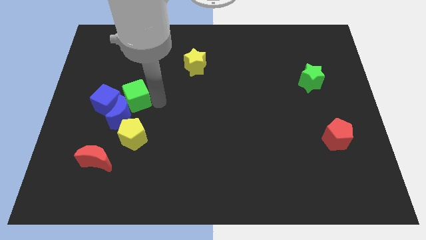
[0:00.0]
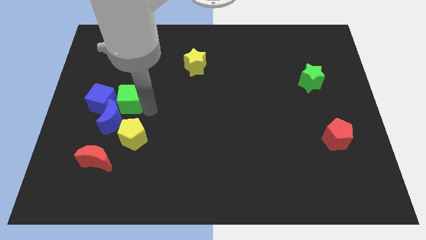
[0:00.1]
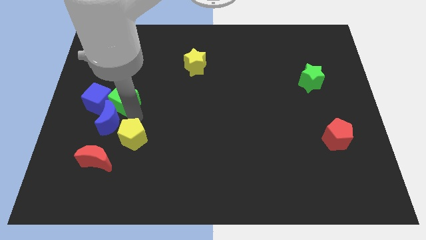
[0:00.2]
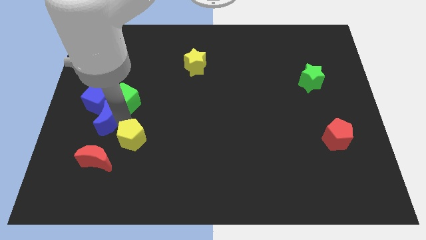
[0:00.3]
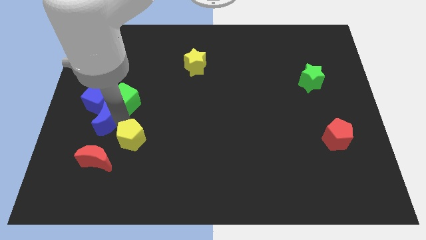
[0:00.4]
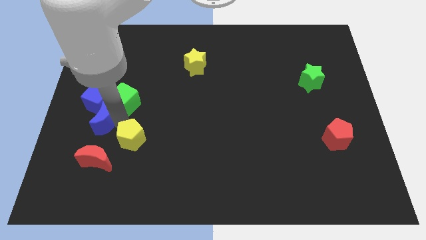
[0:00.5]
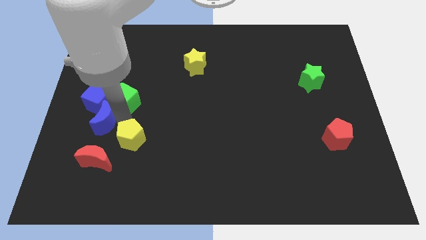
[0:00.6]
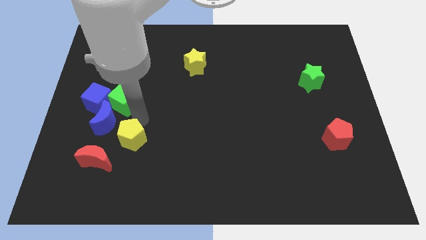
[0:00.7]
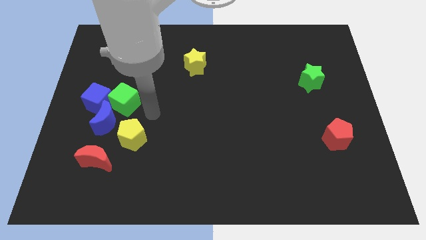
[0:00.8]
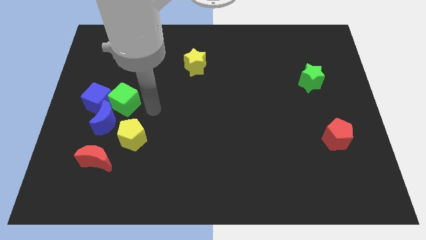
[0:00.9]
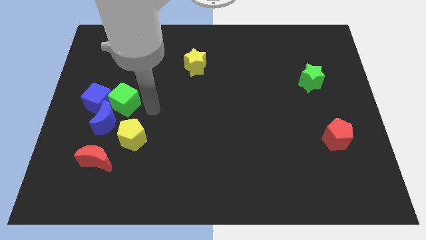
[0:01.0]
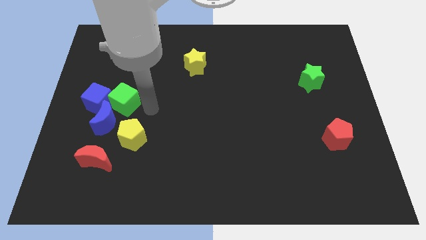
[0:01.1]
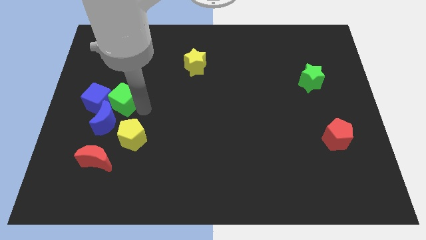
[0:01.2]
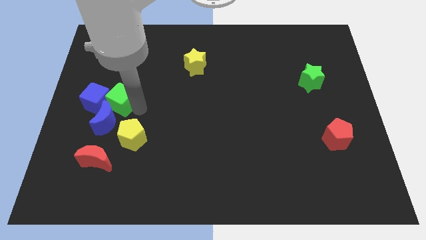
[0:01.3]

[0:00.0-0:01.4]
push the blue moon and cube slightly center left of the board

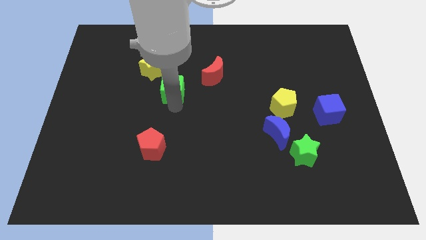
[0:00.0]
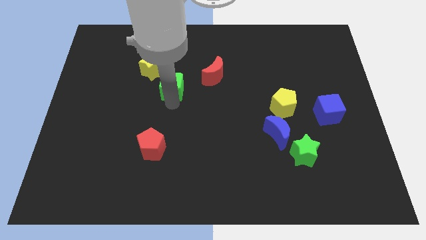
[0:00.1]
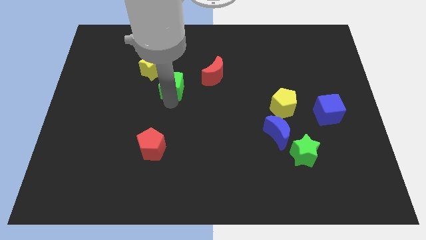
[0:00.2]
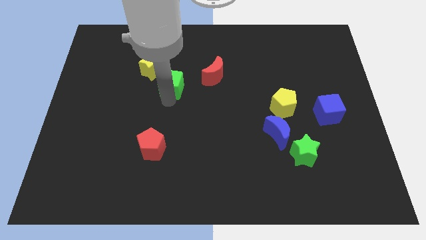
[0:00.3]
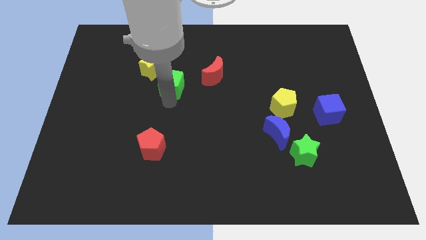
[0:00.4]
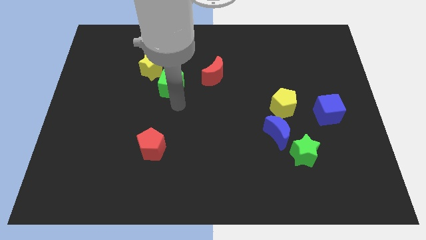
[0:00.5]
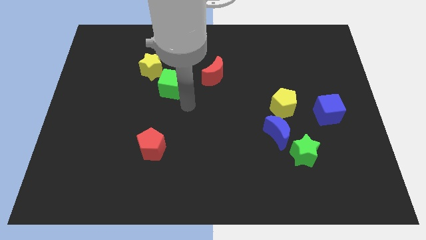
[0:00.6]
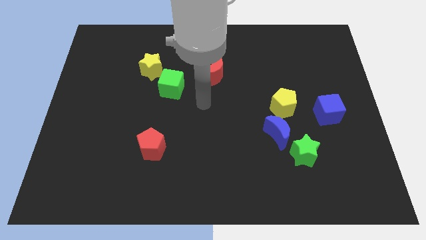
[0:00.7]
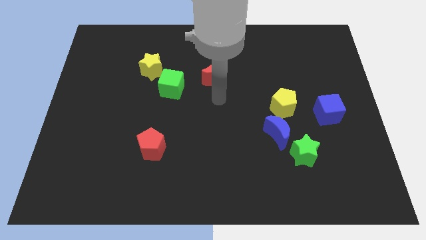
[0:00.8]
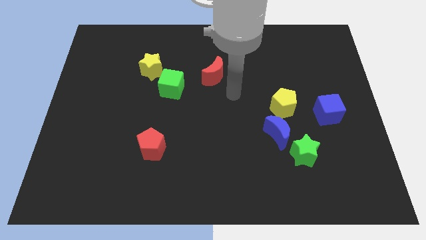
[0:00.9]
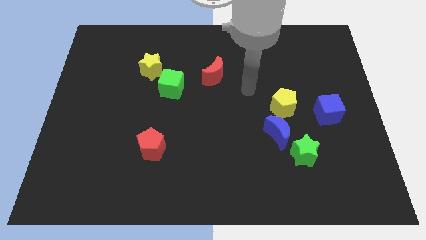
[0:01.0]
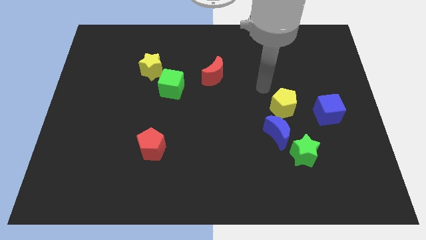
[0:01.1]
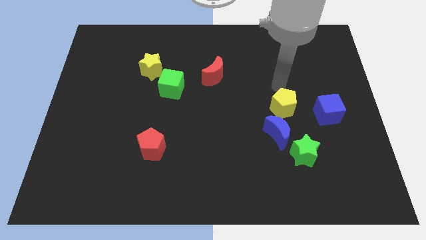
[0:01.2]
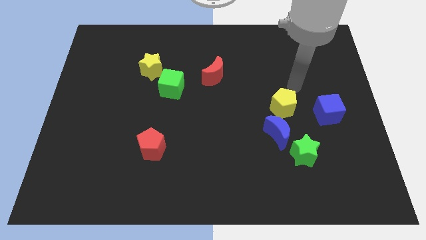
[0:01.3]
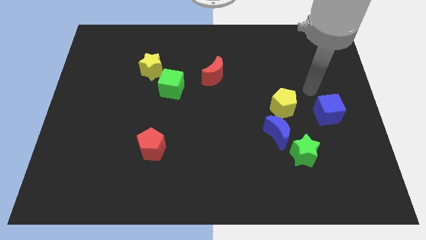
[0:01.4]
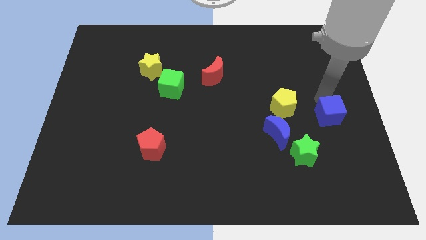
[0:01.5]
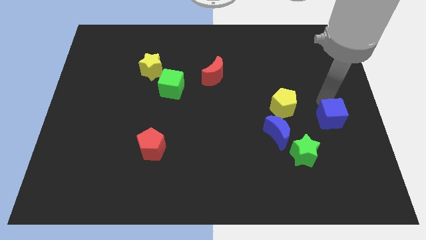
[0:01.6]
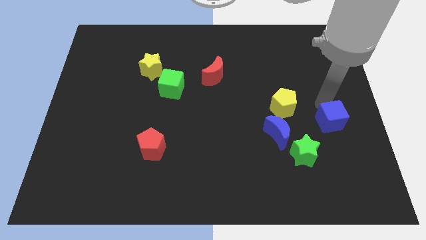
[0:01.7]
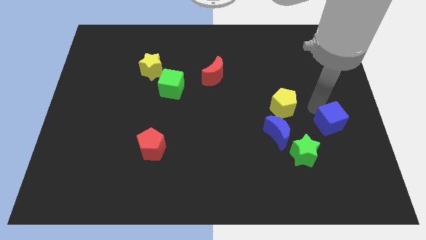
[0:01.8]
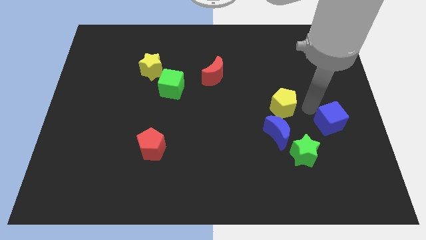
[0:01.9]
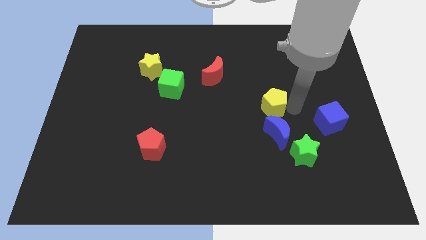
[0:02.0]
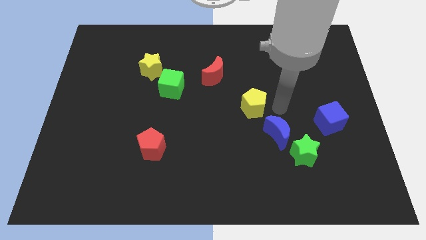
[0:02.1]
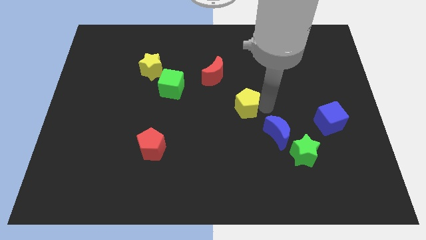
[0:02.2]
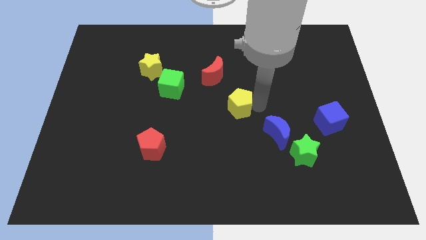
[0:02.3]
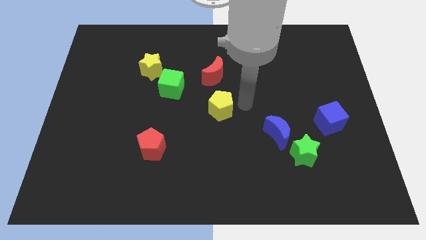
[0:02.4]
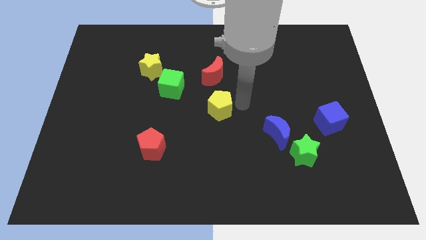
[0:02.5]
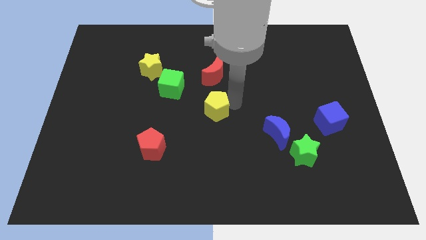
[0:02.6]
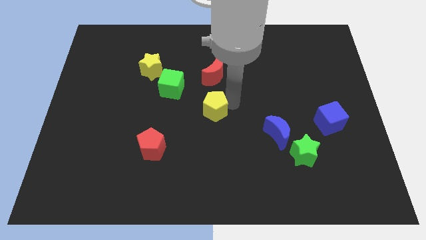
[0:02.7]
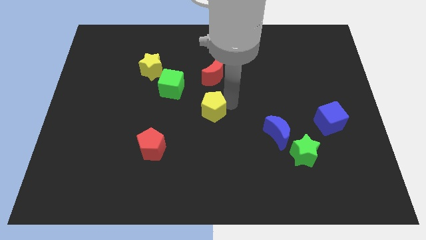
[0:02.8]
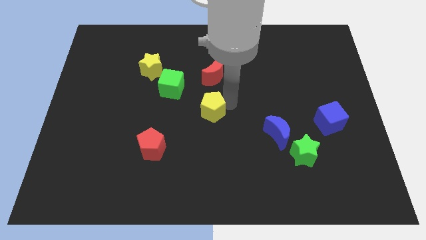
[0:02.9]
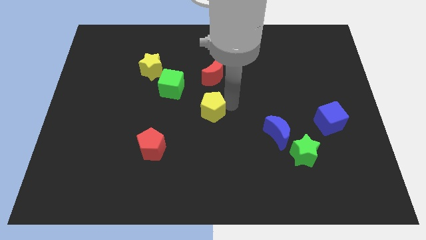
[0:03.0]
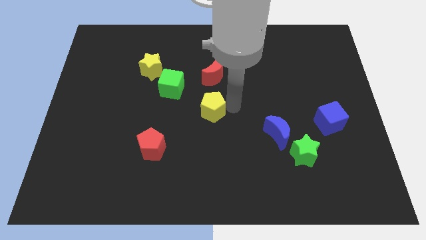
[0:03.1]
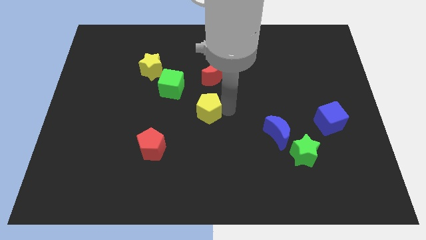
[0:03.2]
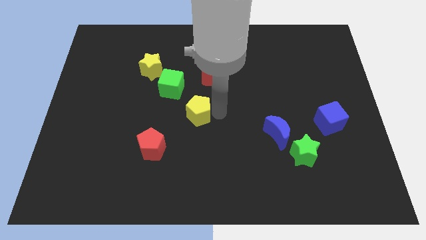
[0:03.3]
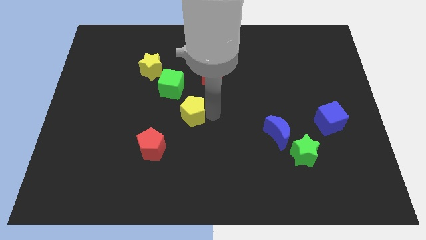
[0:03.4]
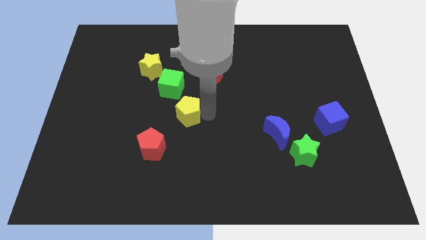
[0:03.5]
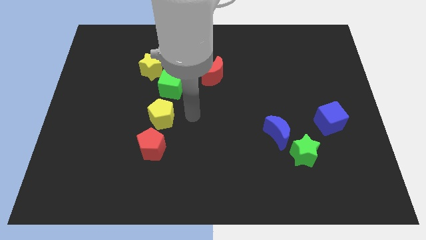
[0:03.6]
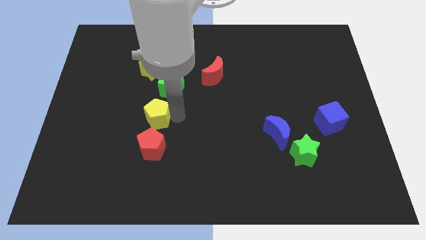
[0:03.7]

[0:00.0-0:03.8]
place the yellow pentagon in between red pentagon and green cube

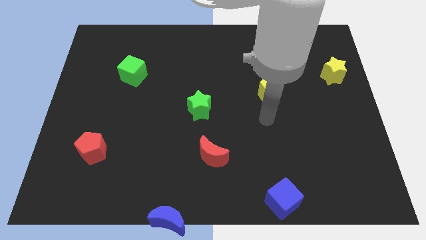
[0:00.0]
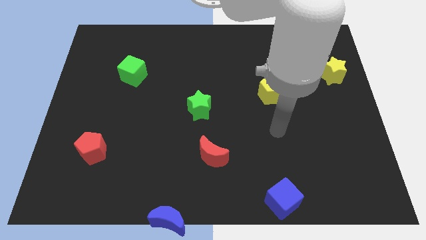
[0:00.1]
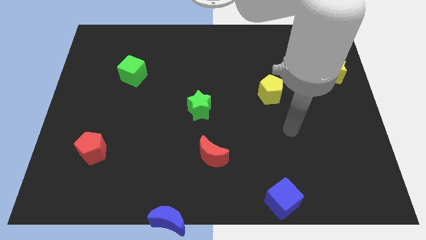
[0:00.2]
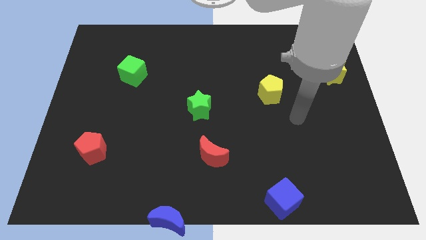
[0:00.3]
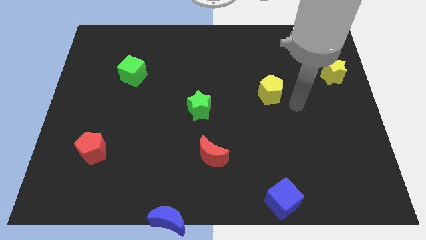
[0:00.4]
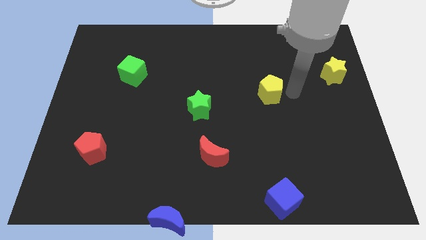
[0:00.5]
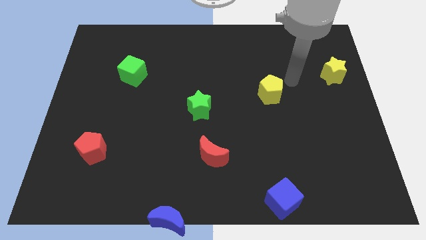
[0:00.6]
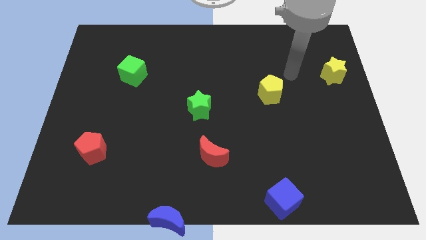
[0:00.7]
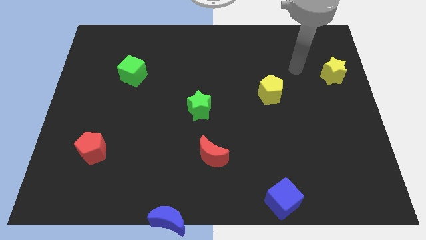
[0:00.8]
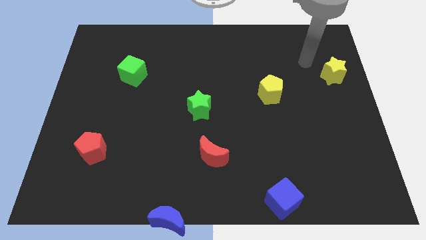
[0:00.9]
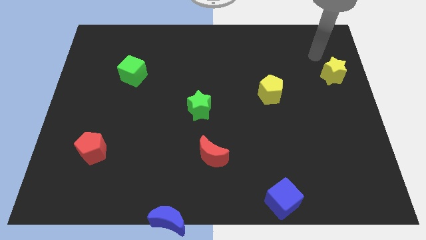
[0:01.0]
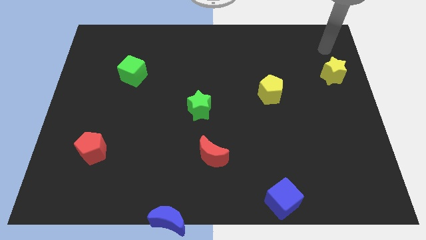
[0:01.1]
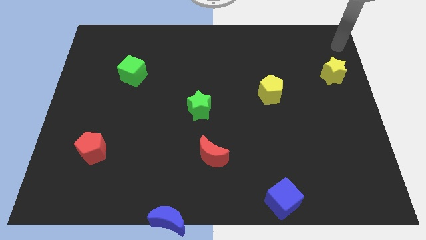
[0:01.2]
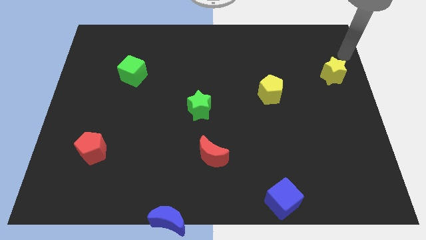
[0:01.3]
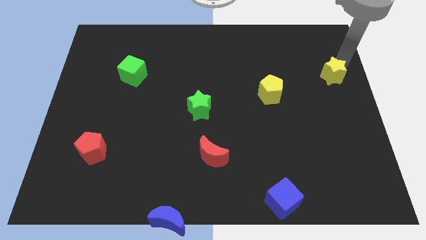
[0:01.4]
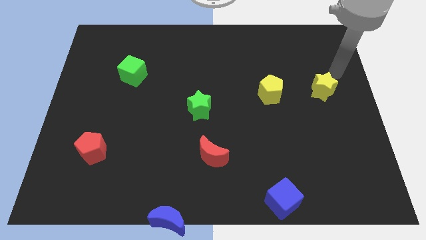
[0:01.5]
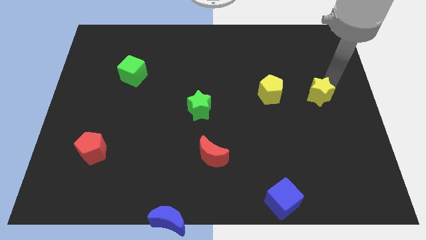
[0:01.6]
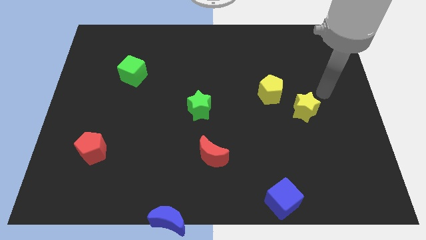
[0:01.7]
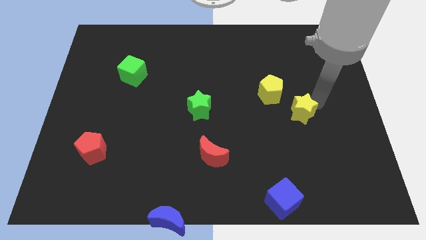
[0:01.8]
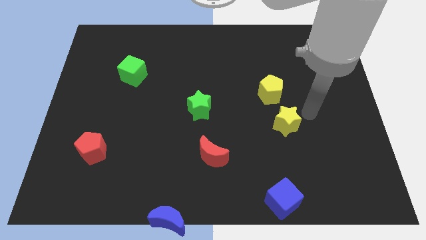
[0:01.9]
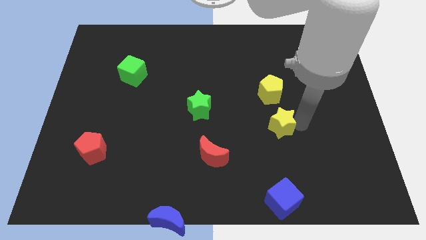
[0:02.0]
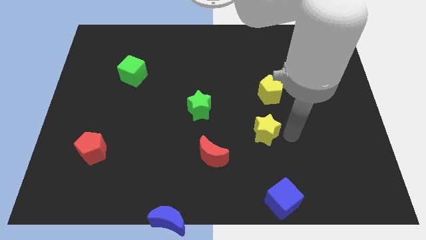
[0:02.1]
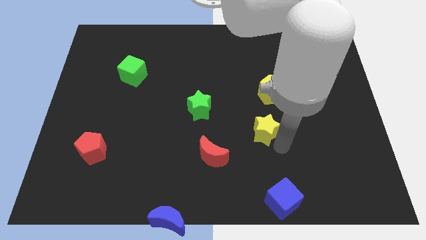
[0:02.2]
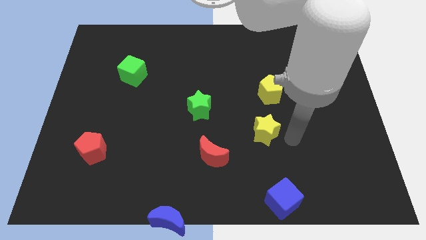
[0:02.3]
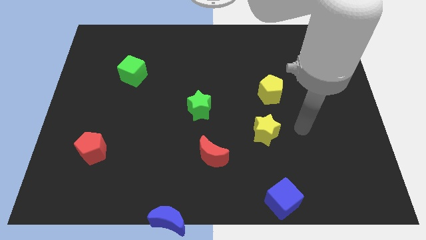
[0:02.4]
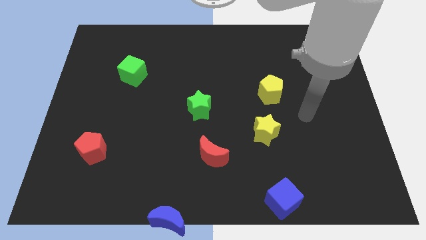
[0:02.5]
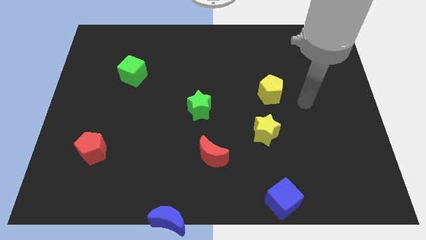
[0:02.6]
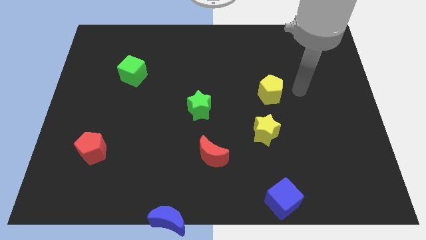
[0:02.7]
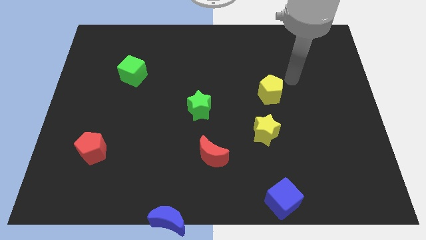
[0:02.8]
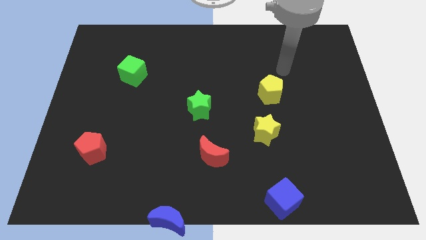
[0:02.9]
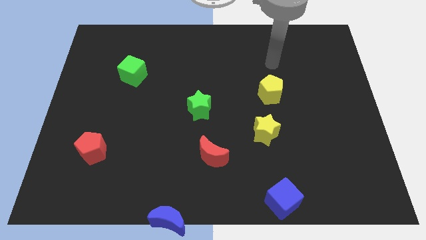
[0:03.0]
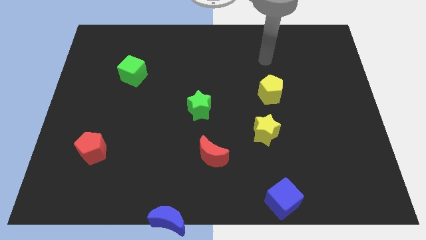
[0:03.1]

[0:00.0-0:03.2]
place the yellow star below the yellow pentagon

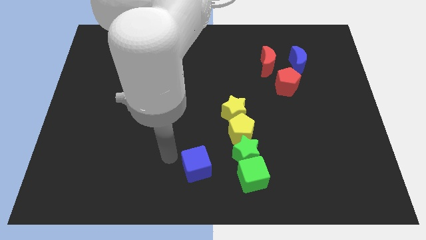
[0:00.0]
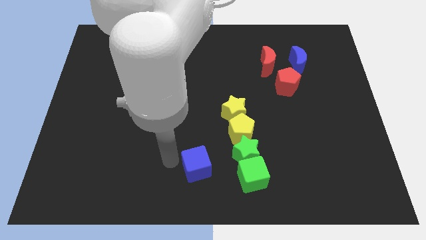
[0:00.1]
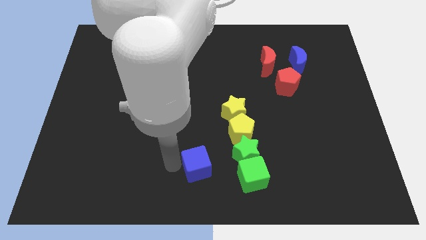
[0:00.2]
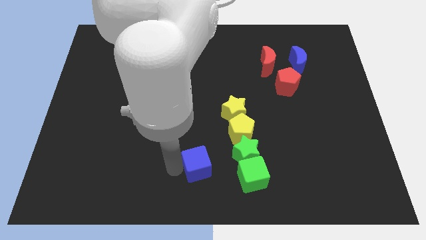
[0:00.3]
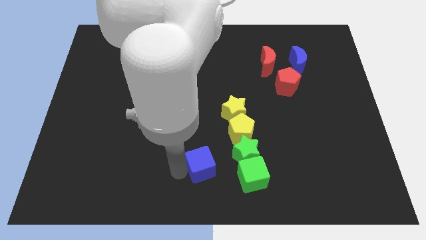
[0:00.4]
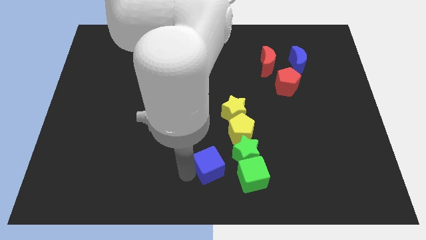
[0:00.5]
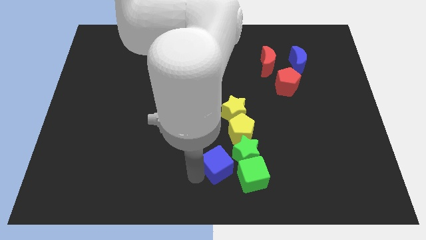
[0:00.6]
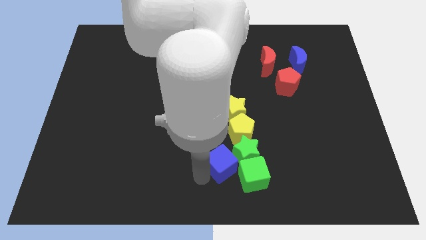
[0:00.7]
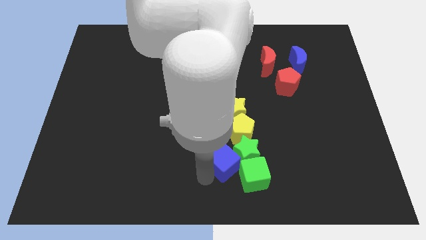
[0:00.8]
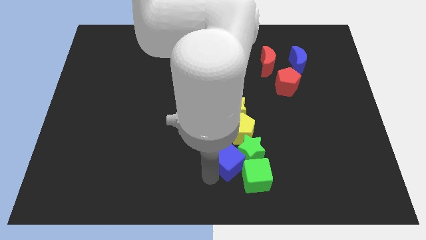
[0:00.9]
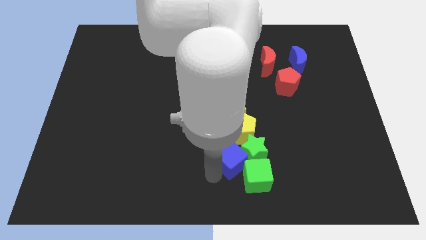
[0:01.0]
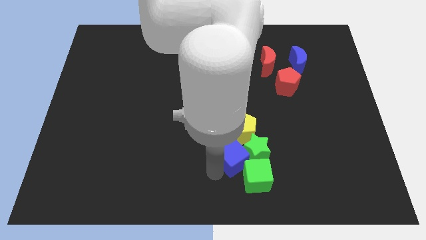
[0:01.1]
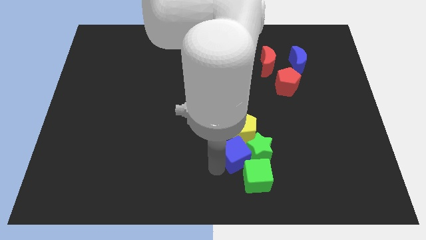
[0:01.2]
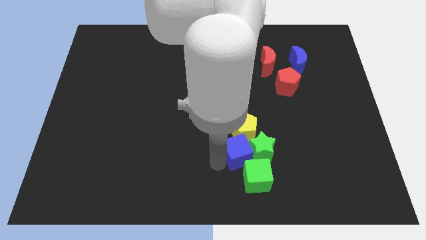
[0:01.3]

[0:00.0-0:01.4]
push blue cube into the green star
